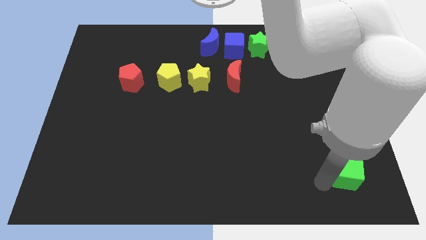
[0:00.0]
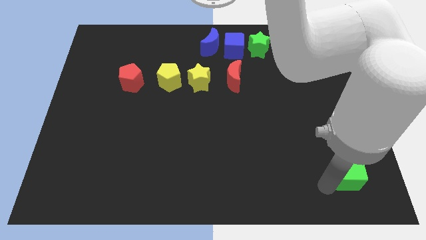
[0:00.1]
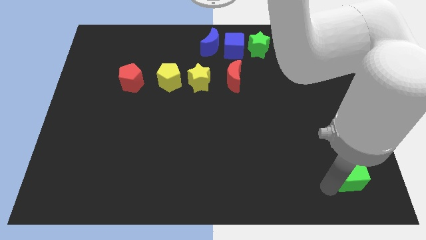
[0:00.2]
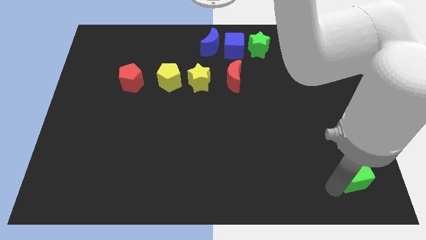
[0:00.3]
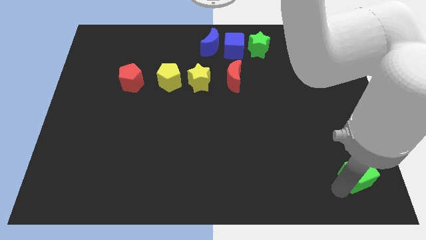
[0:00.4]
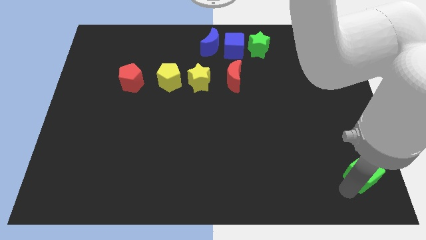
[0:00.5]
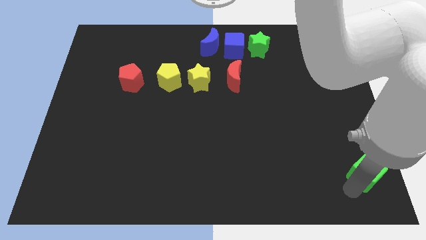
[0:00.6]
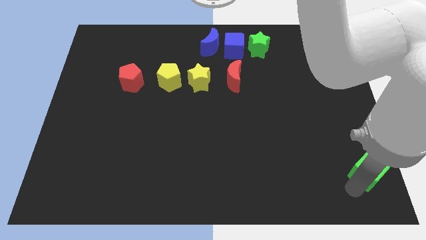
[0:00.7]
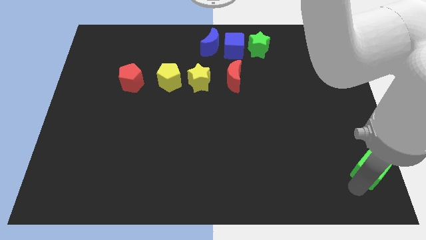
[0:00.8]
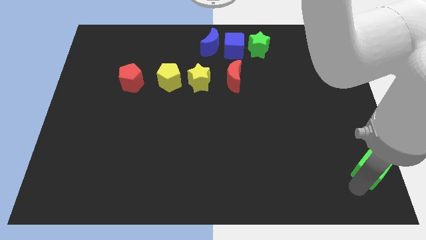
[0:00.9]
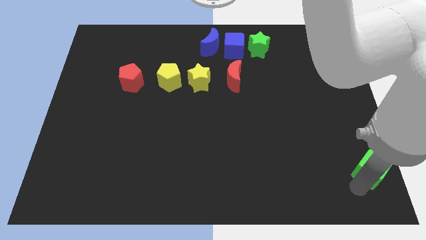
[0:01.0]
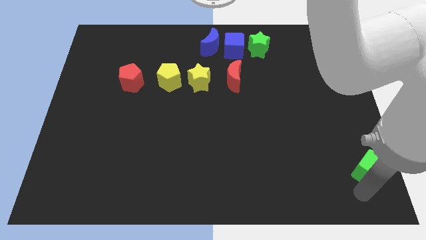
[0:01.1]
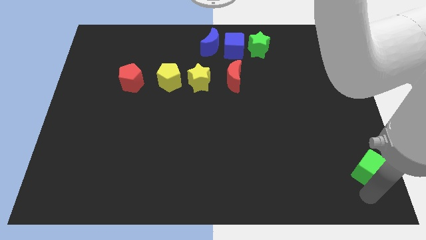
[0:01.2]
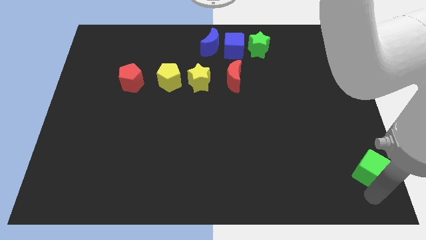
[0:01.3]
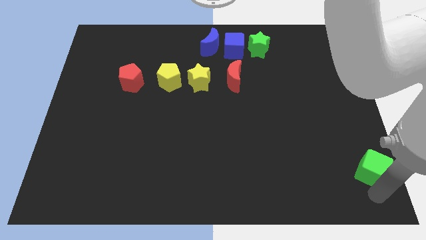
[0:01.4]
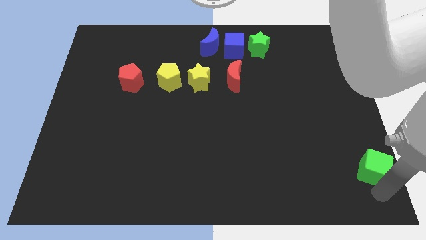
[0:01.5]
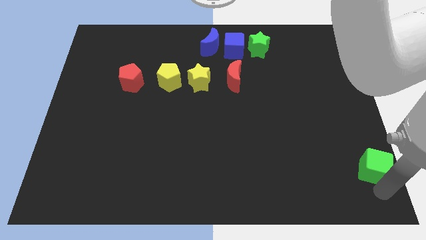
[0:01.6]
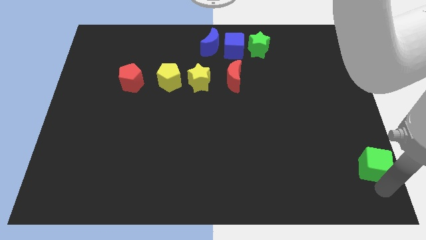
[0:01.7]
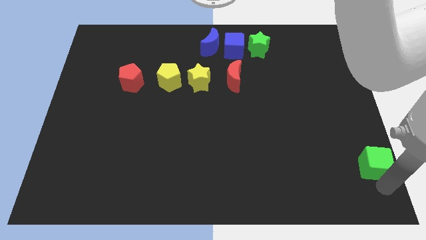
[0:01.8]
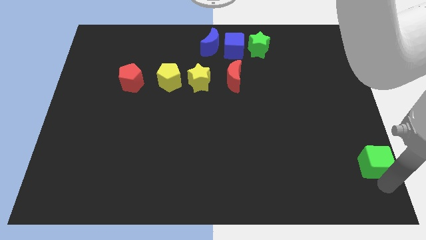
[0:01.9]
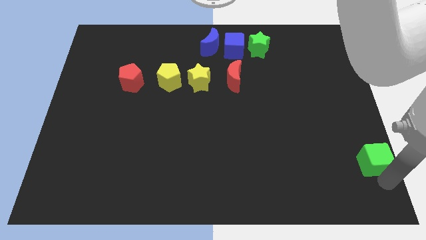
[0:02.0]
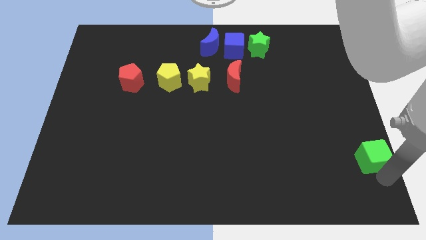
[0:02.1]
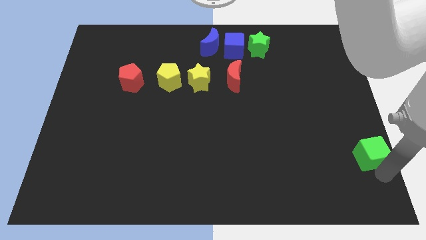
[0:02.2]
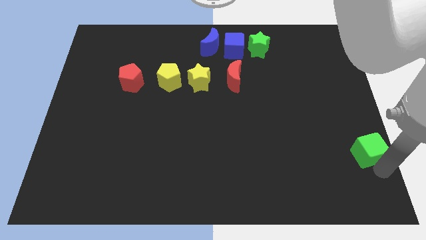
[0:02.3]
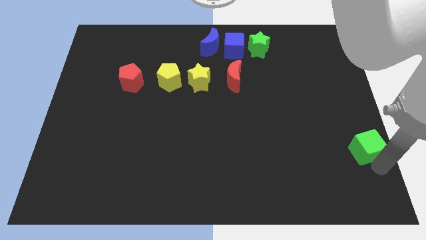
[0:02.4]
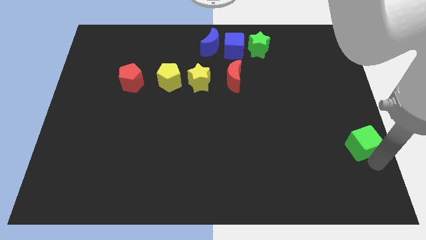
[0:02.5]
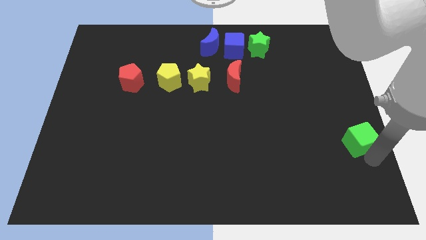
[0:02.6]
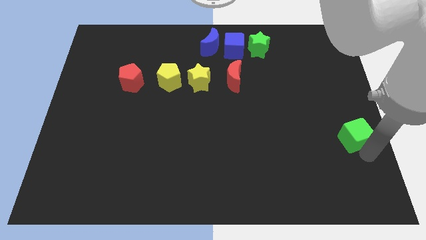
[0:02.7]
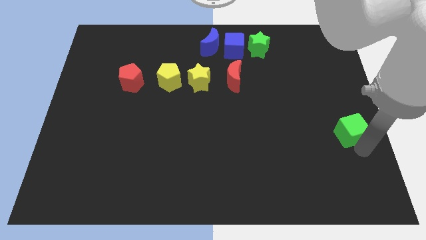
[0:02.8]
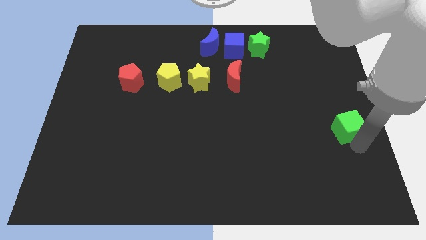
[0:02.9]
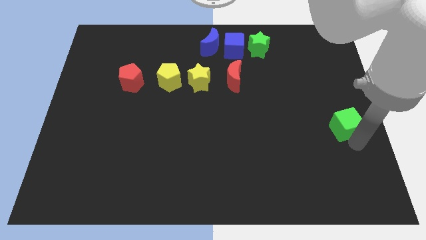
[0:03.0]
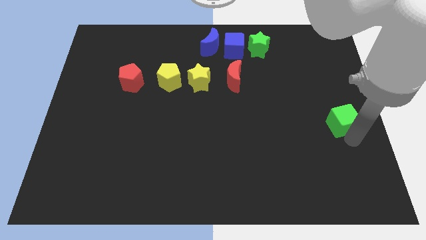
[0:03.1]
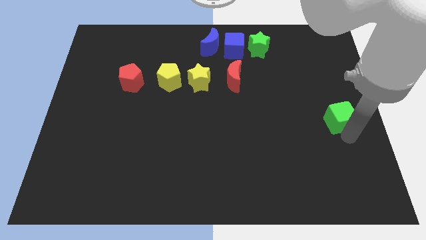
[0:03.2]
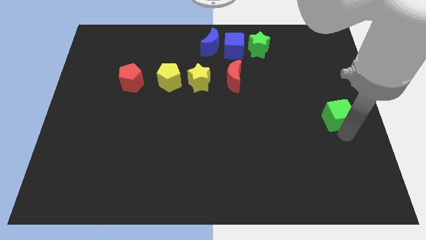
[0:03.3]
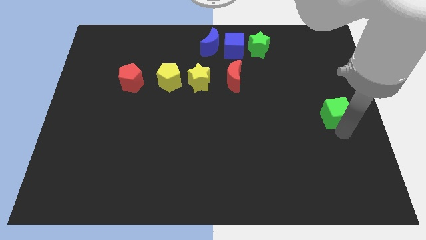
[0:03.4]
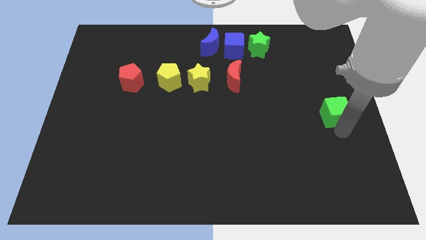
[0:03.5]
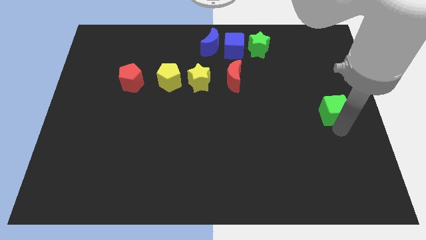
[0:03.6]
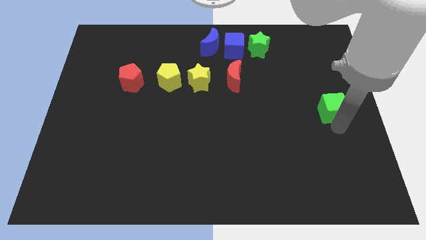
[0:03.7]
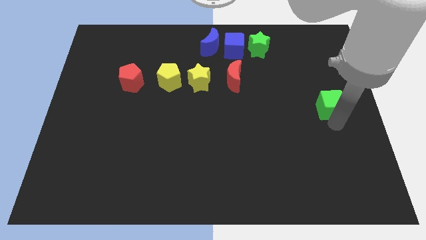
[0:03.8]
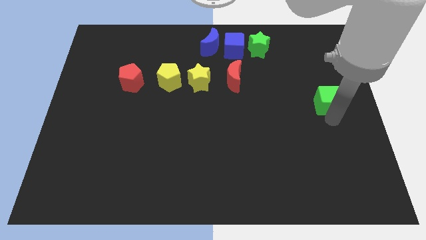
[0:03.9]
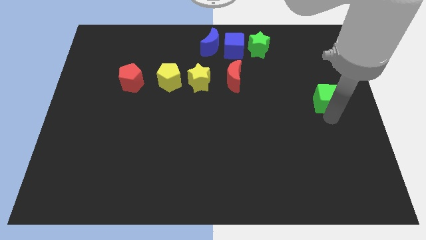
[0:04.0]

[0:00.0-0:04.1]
push the green cube to the right center of the board

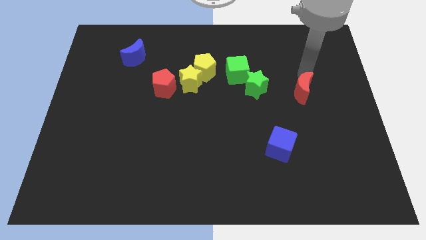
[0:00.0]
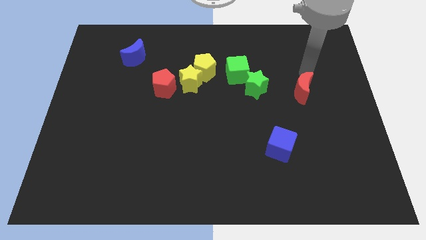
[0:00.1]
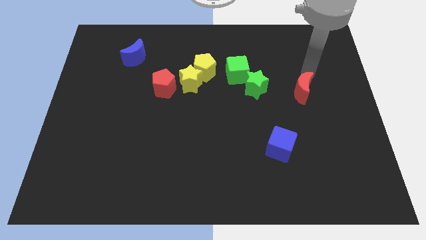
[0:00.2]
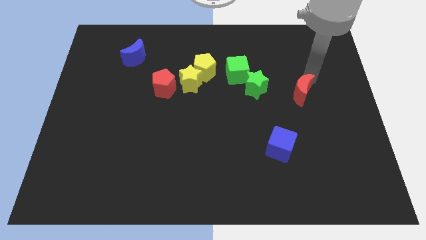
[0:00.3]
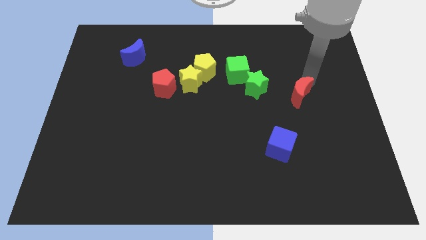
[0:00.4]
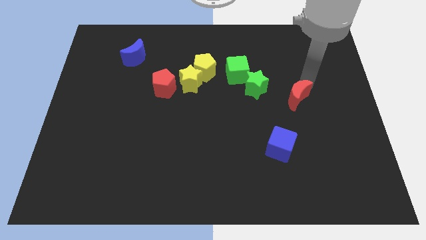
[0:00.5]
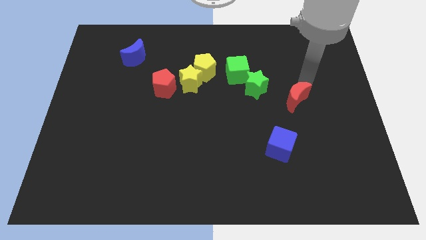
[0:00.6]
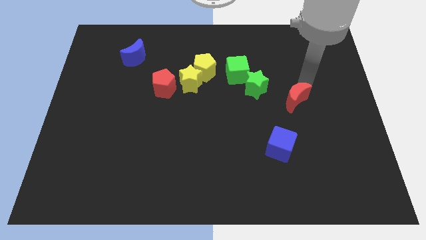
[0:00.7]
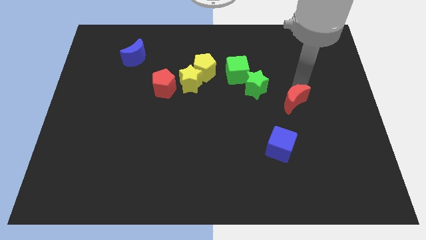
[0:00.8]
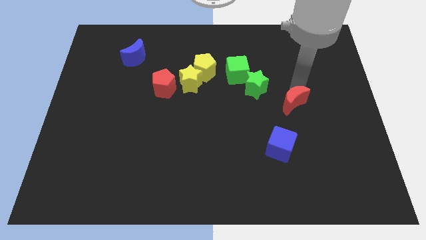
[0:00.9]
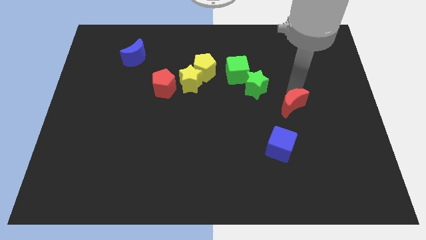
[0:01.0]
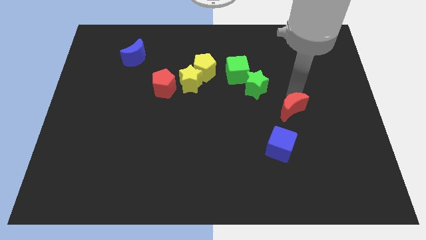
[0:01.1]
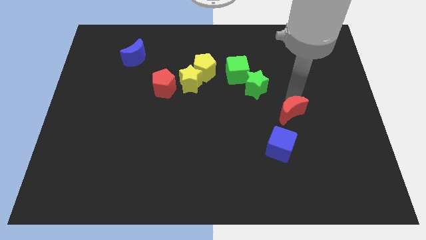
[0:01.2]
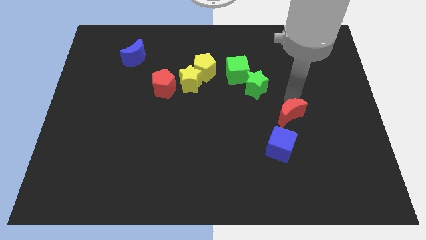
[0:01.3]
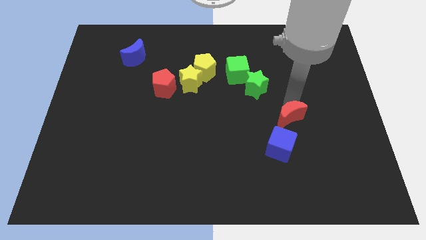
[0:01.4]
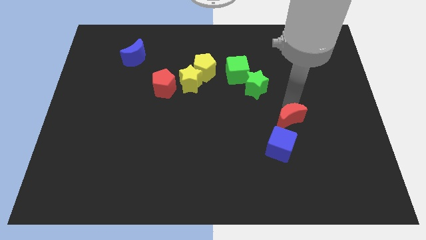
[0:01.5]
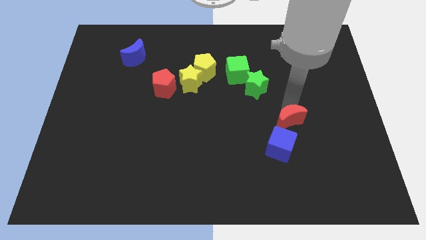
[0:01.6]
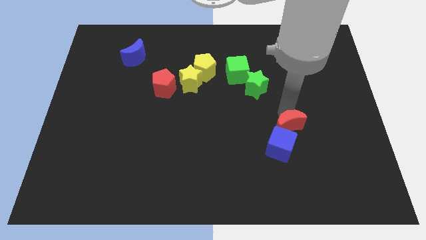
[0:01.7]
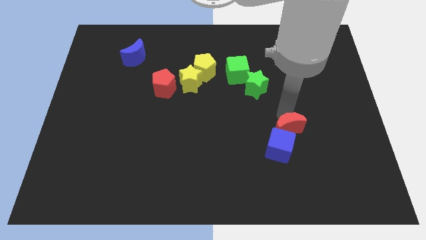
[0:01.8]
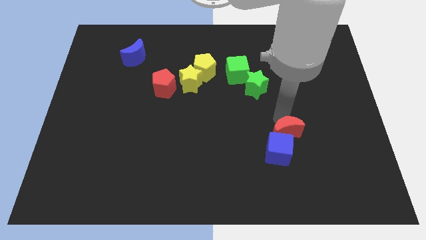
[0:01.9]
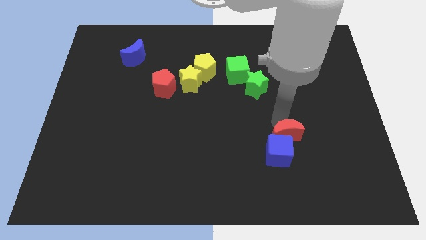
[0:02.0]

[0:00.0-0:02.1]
put the red moon into the blue cube

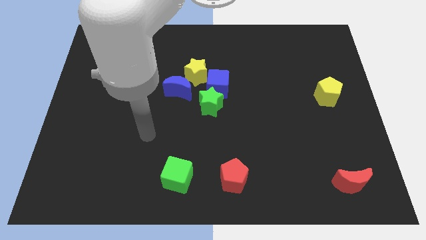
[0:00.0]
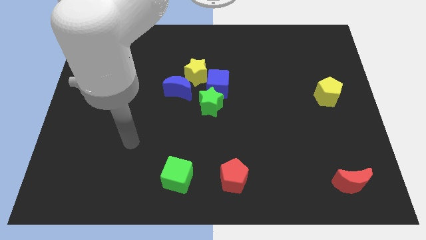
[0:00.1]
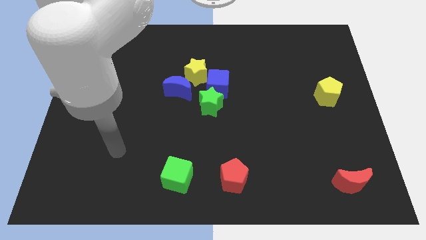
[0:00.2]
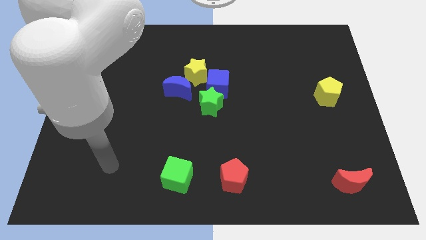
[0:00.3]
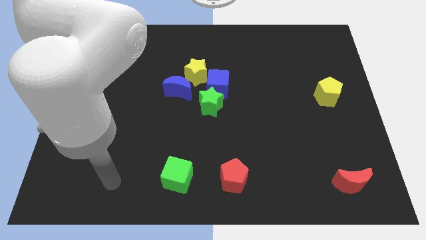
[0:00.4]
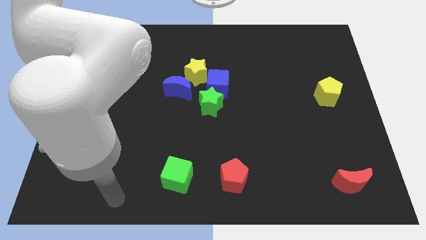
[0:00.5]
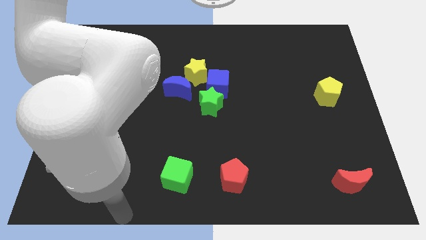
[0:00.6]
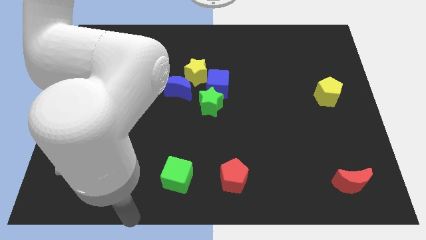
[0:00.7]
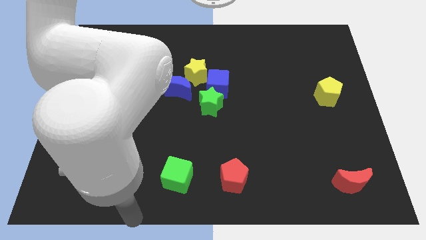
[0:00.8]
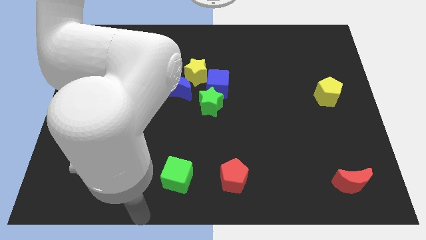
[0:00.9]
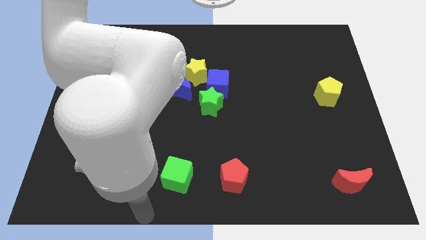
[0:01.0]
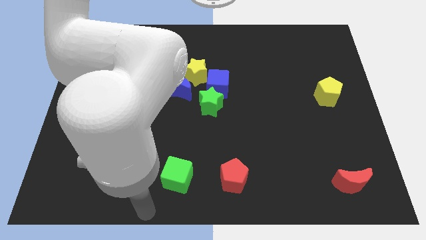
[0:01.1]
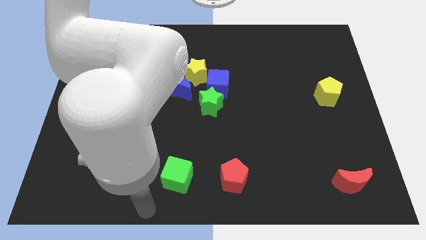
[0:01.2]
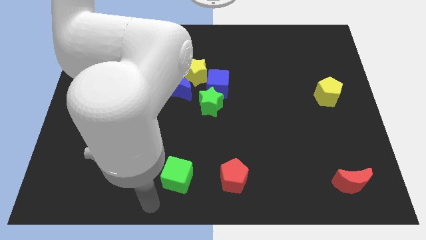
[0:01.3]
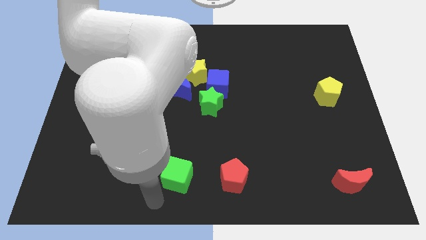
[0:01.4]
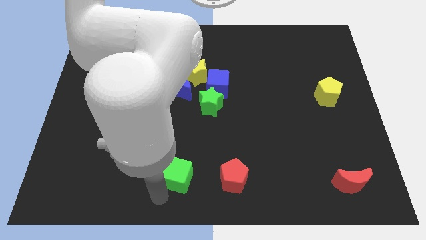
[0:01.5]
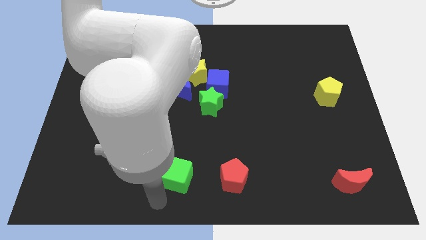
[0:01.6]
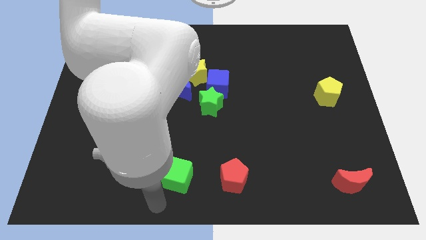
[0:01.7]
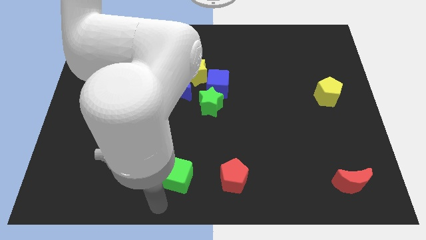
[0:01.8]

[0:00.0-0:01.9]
point your arm at the bottom side of the green cube

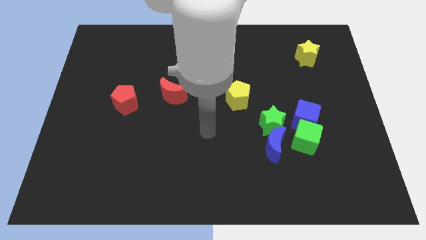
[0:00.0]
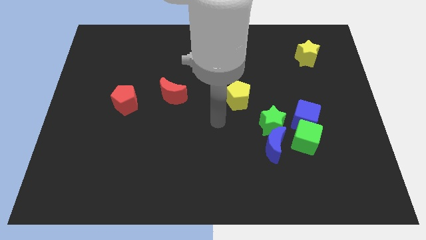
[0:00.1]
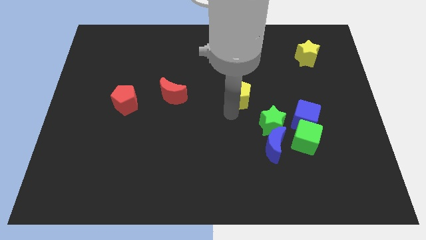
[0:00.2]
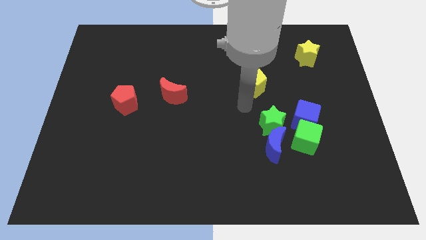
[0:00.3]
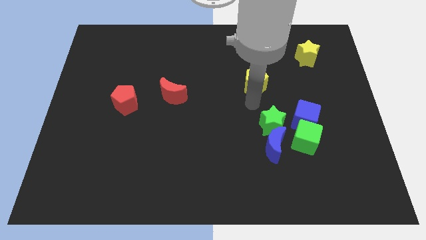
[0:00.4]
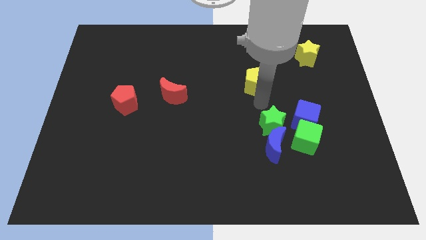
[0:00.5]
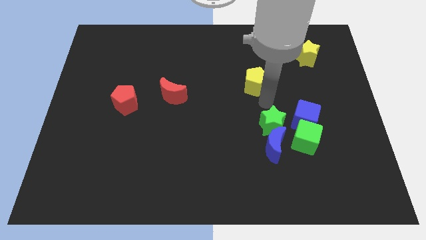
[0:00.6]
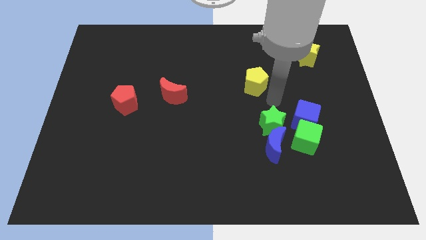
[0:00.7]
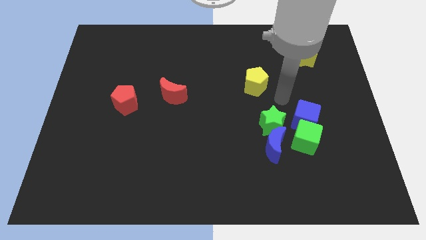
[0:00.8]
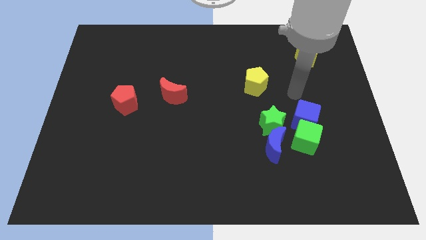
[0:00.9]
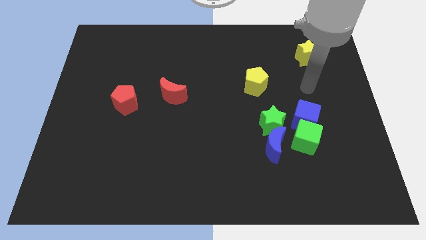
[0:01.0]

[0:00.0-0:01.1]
move the yellow pentagon diagonally to the top left of the blue cube
